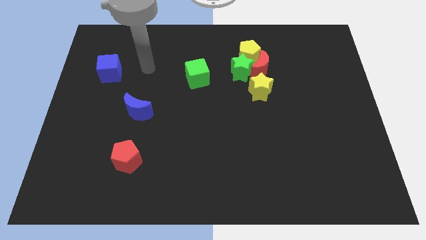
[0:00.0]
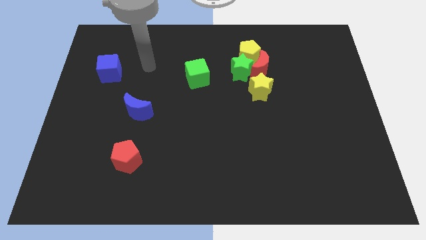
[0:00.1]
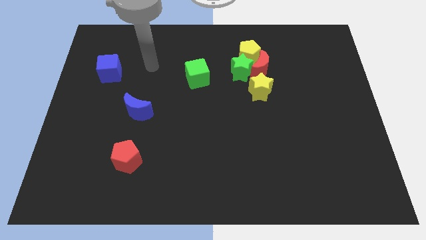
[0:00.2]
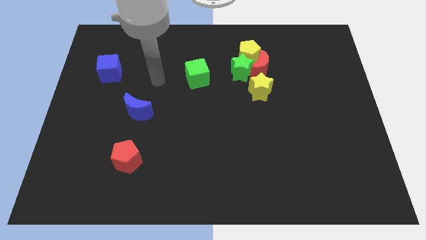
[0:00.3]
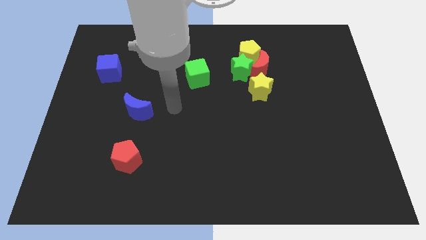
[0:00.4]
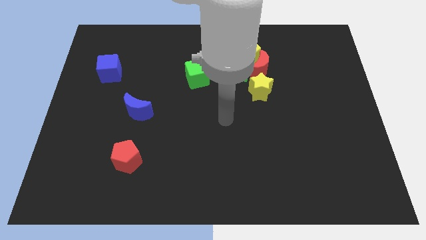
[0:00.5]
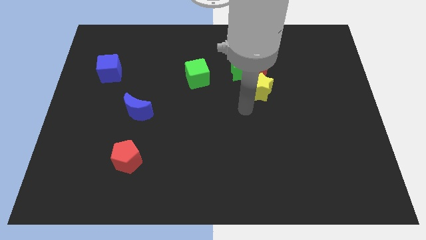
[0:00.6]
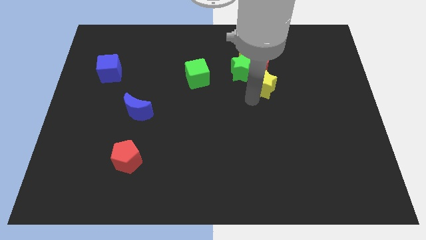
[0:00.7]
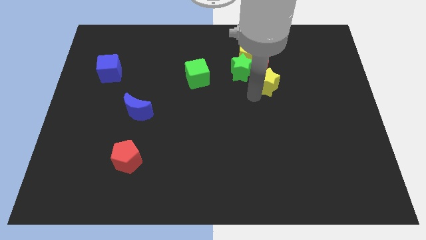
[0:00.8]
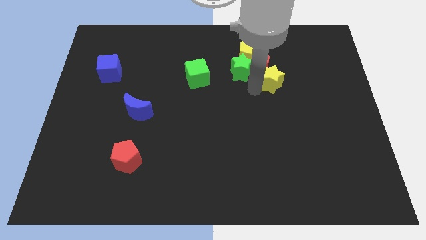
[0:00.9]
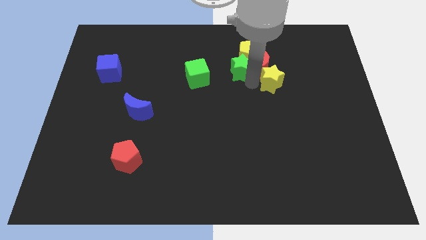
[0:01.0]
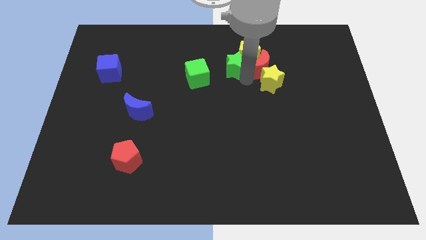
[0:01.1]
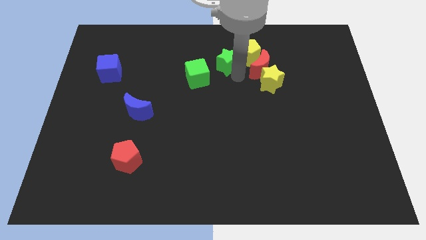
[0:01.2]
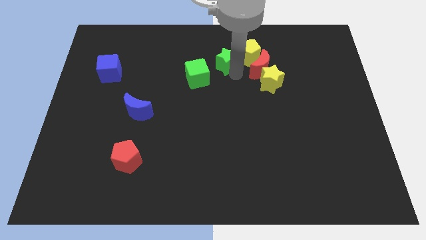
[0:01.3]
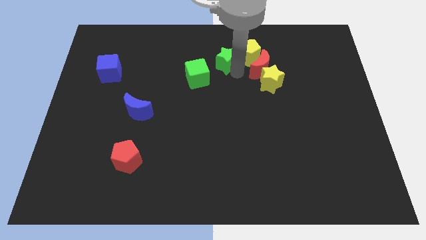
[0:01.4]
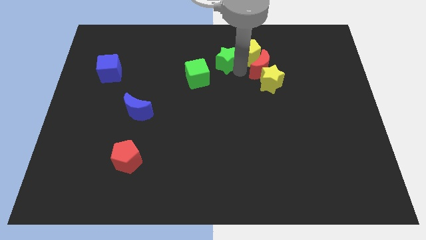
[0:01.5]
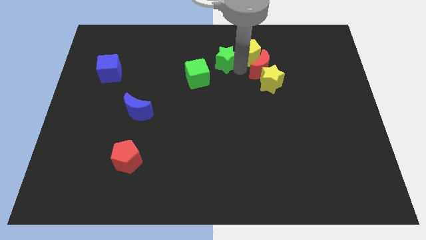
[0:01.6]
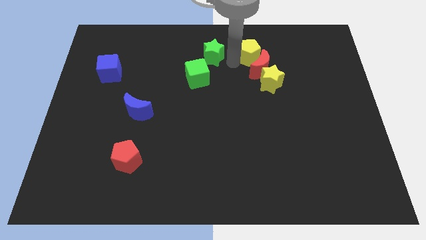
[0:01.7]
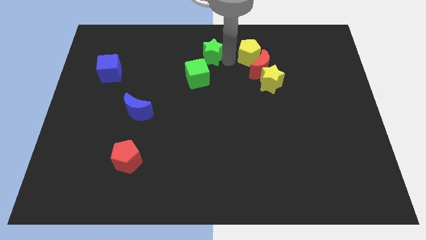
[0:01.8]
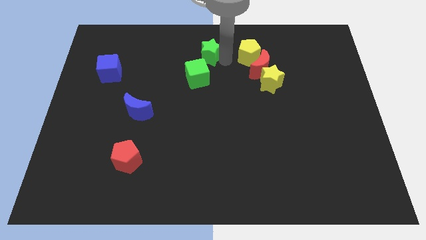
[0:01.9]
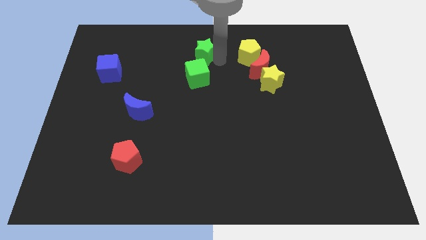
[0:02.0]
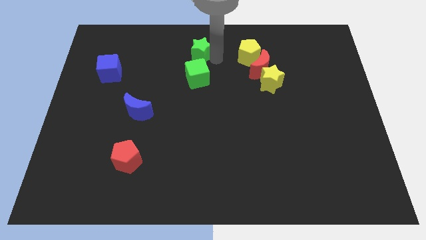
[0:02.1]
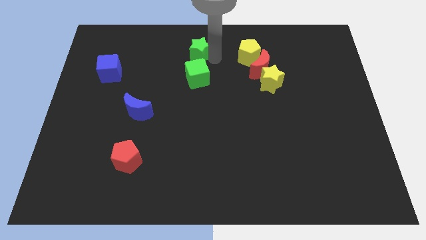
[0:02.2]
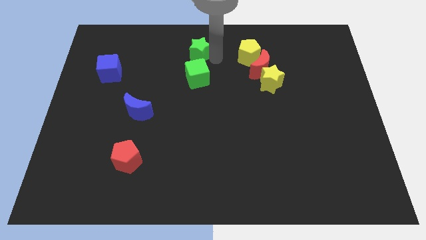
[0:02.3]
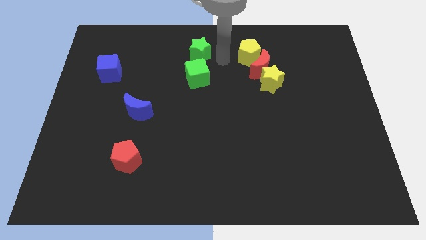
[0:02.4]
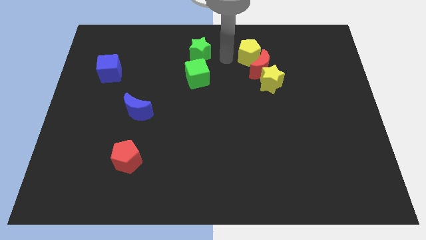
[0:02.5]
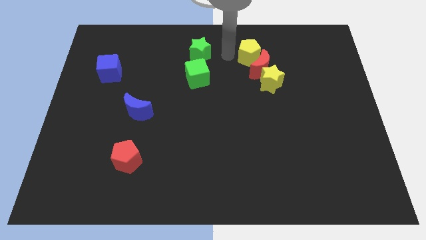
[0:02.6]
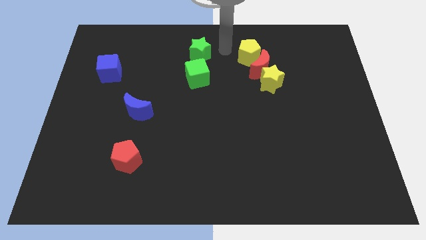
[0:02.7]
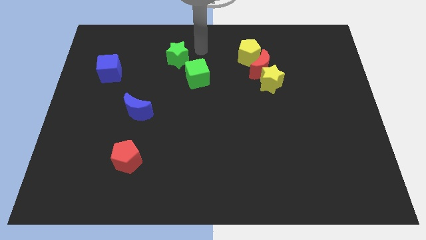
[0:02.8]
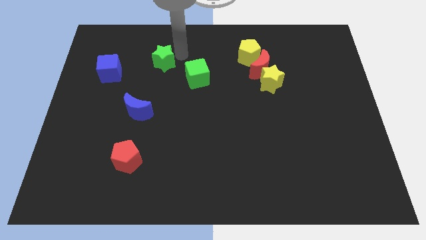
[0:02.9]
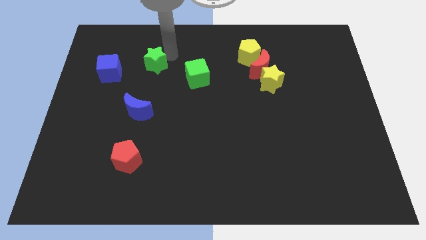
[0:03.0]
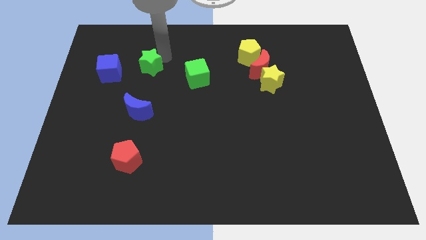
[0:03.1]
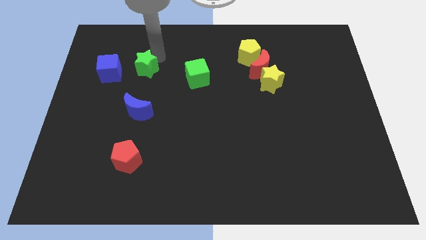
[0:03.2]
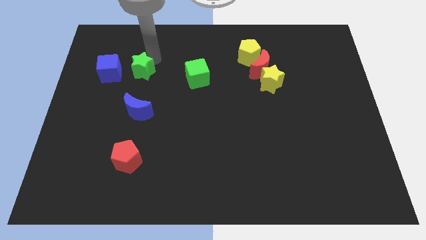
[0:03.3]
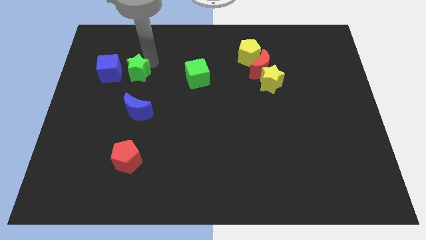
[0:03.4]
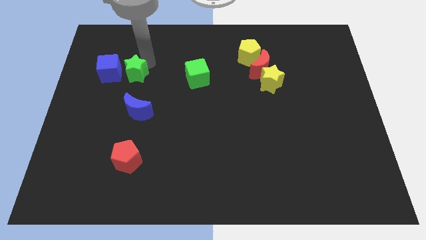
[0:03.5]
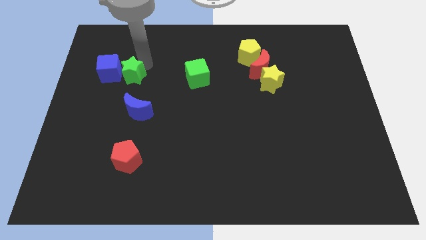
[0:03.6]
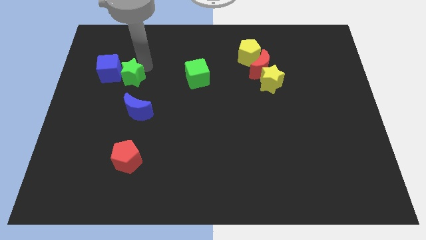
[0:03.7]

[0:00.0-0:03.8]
slide the green star next to the blue cube

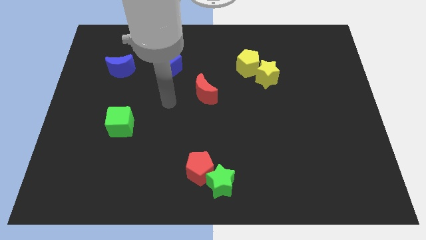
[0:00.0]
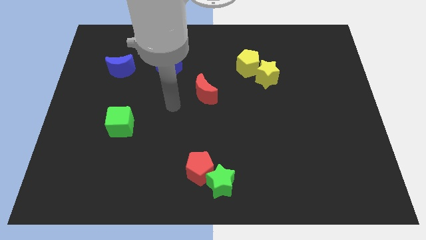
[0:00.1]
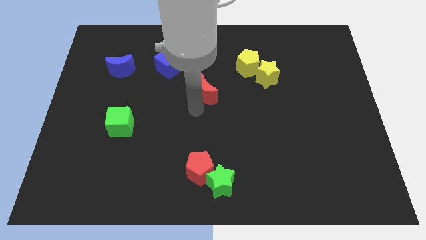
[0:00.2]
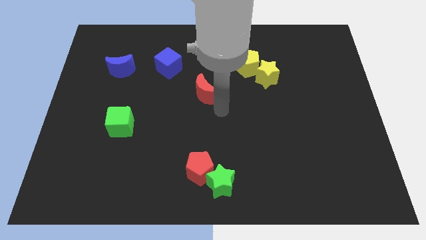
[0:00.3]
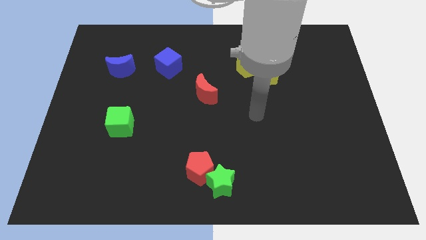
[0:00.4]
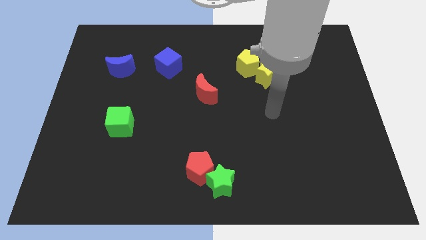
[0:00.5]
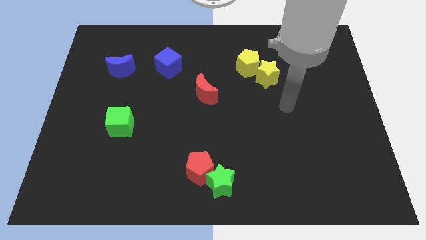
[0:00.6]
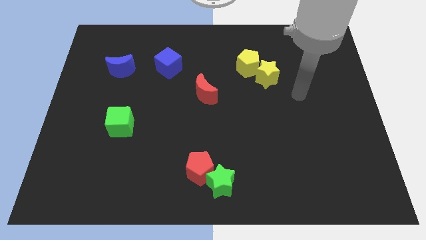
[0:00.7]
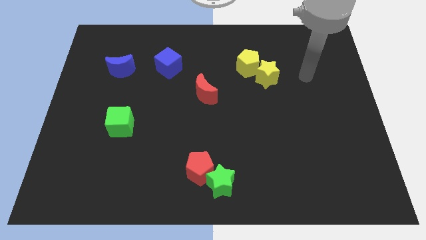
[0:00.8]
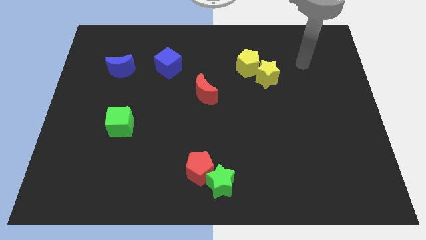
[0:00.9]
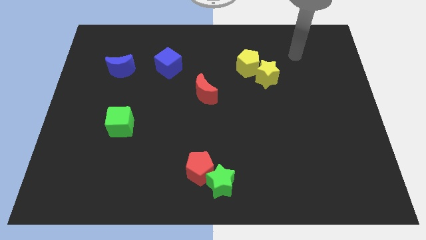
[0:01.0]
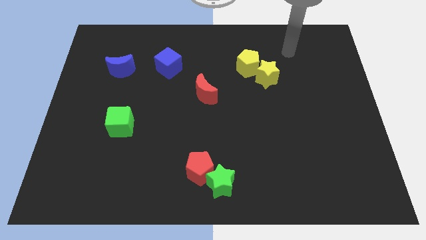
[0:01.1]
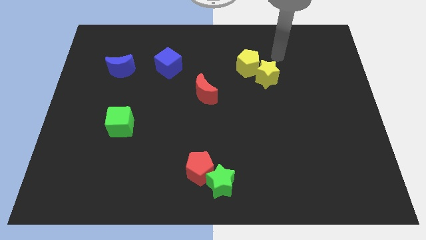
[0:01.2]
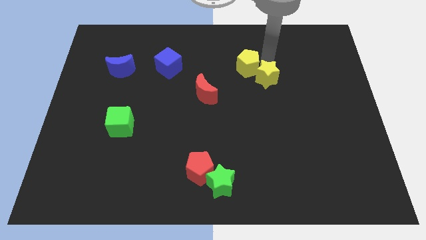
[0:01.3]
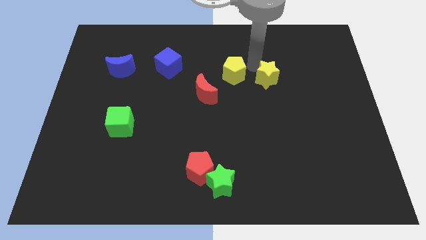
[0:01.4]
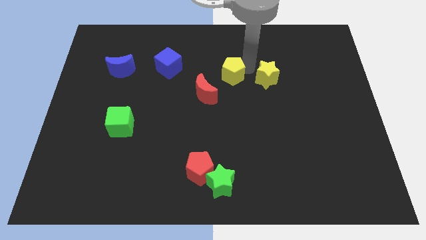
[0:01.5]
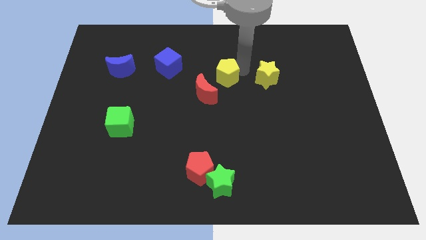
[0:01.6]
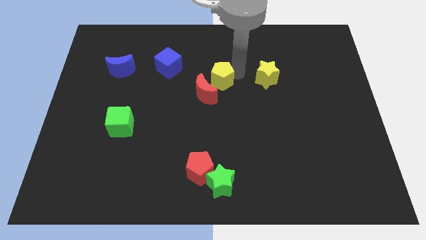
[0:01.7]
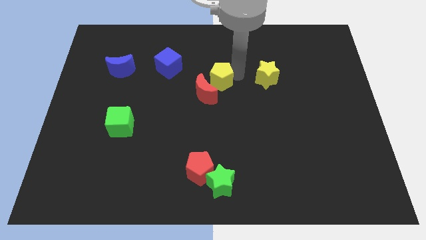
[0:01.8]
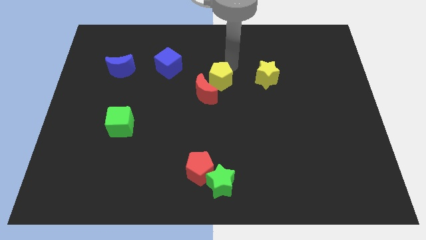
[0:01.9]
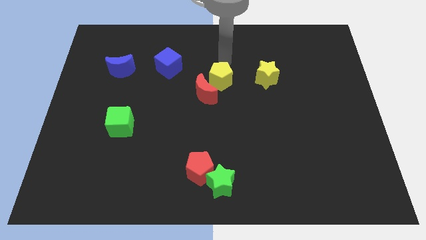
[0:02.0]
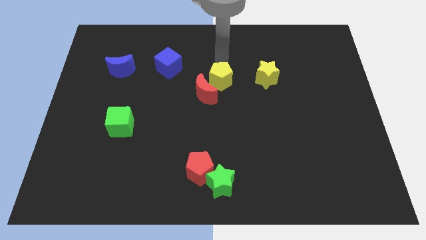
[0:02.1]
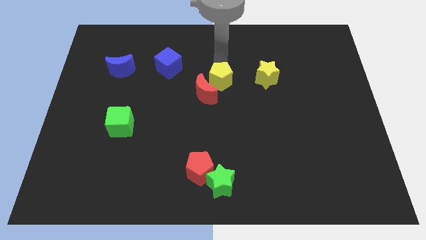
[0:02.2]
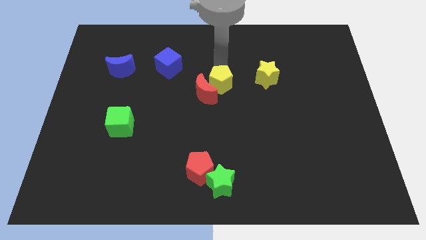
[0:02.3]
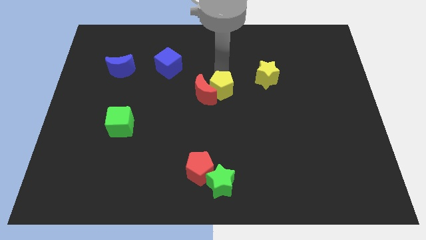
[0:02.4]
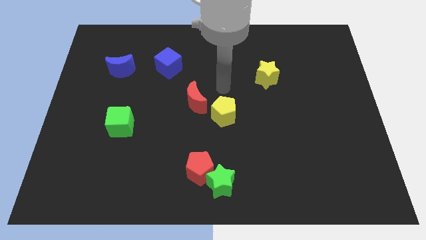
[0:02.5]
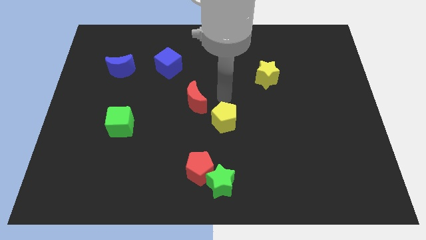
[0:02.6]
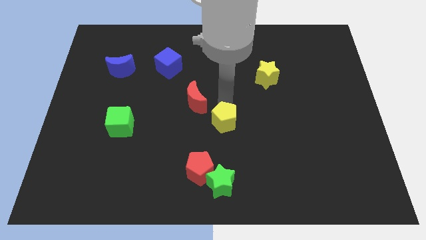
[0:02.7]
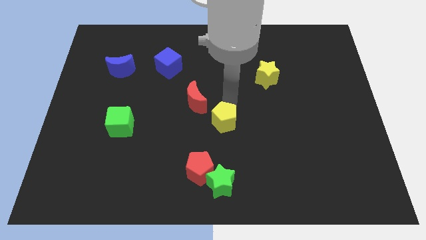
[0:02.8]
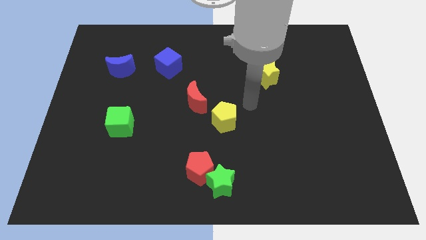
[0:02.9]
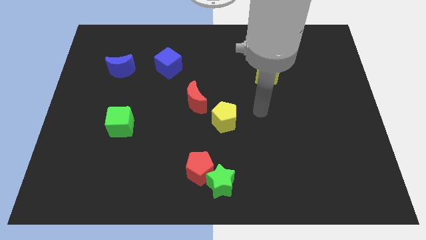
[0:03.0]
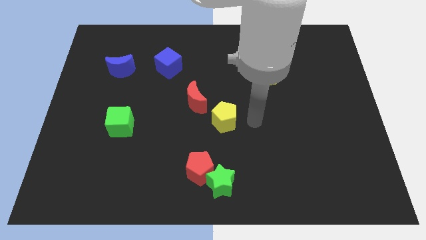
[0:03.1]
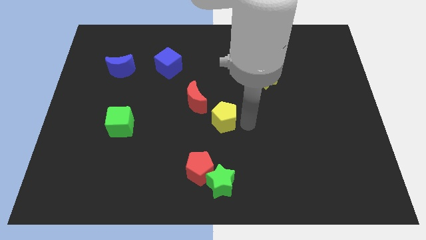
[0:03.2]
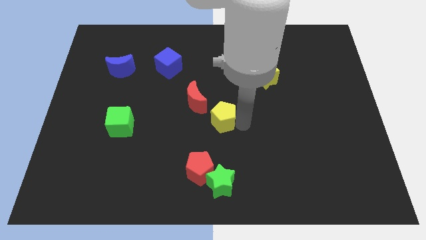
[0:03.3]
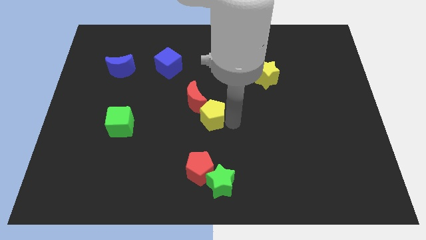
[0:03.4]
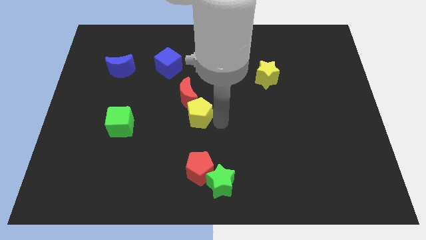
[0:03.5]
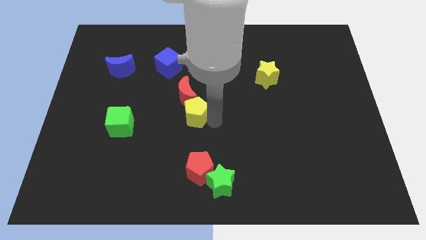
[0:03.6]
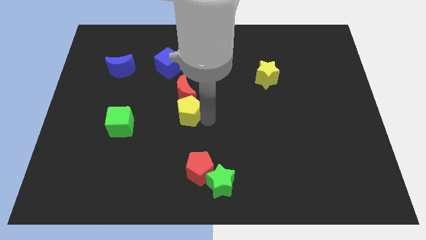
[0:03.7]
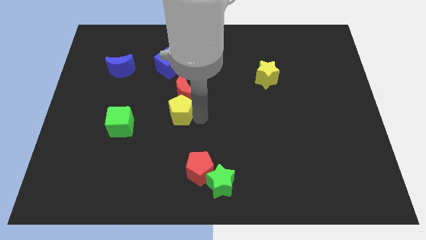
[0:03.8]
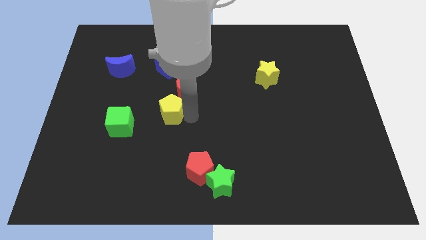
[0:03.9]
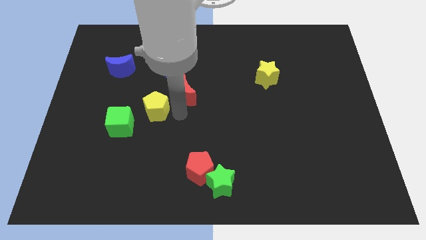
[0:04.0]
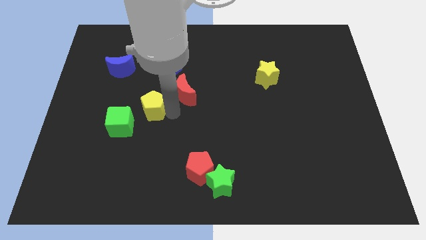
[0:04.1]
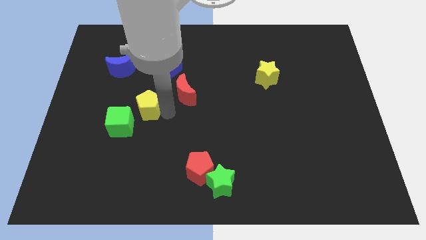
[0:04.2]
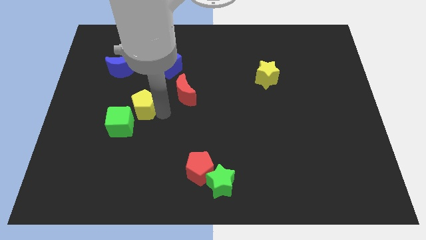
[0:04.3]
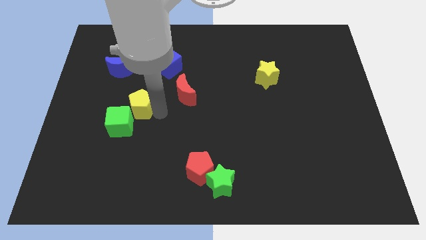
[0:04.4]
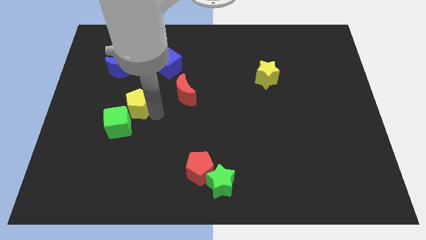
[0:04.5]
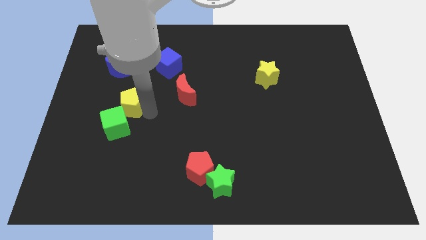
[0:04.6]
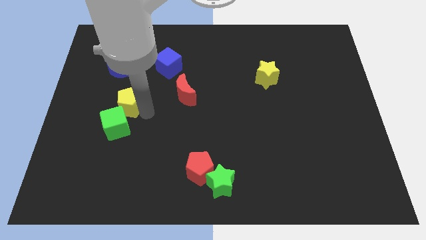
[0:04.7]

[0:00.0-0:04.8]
push the yellow pentagon towards the green cube
